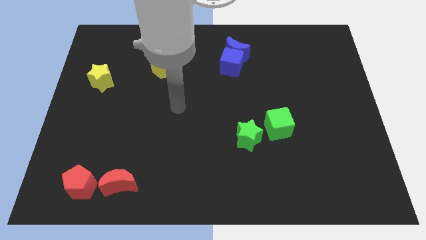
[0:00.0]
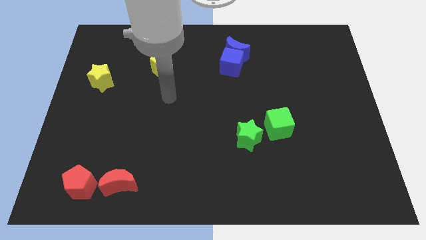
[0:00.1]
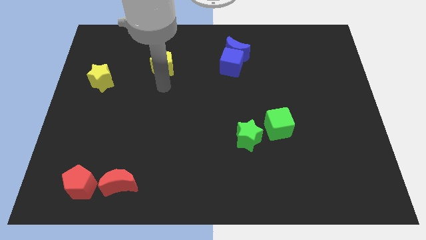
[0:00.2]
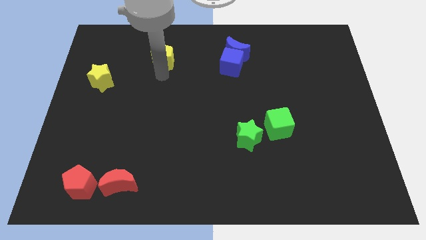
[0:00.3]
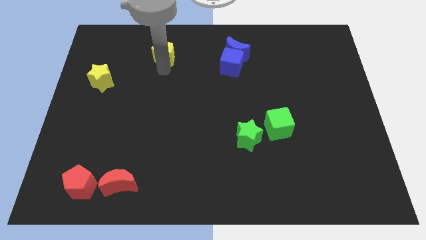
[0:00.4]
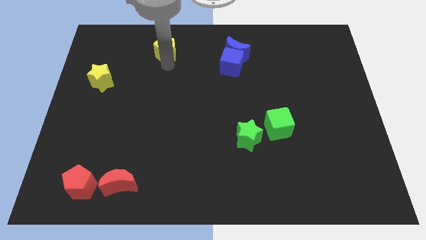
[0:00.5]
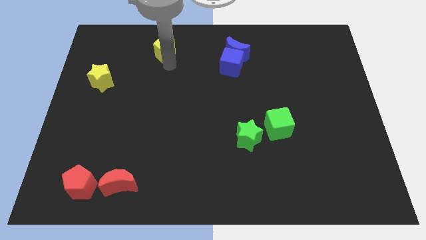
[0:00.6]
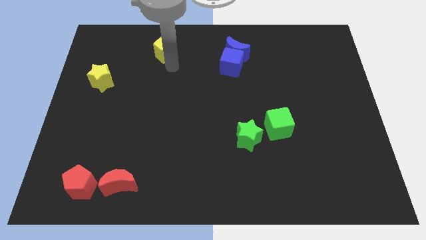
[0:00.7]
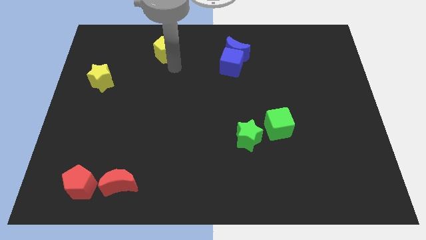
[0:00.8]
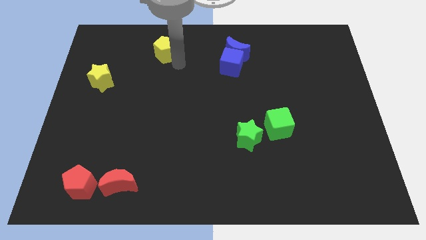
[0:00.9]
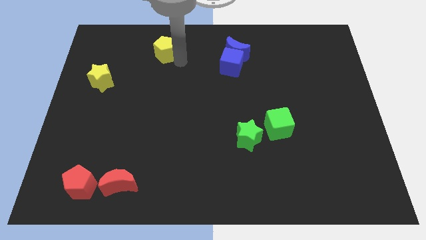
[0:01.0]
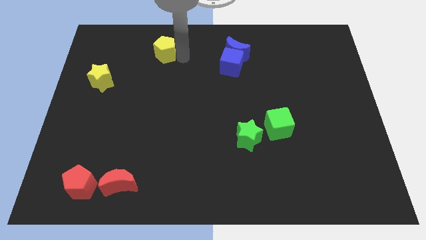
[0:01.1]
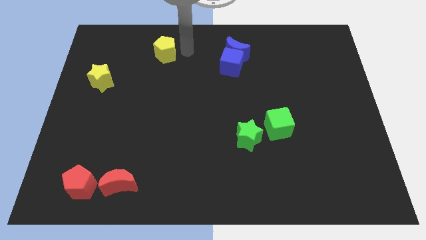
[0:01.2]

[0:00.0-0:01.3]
move the yellow pentagon to the top of the board

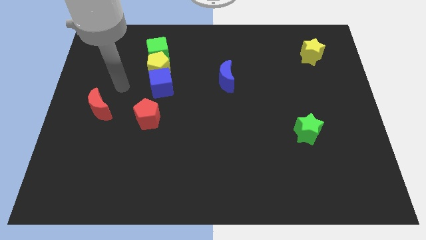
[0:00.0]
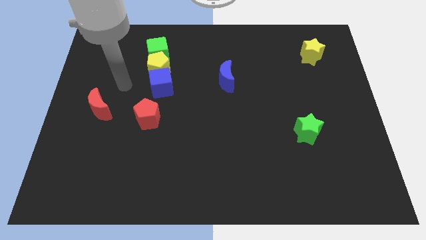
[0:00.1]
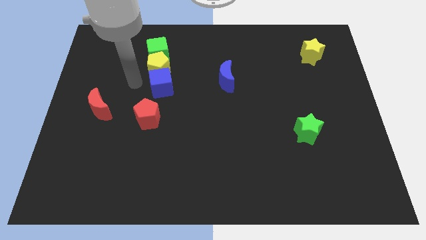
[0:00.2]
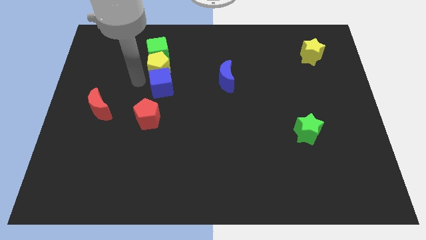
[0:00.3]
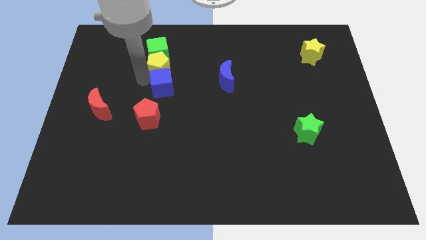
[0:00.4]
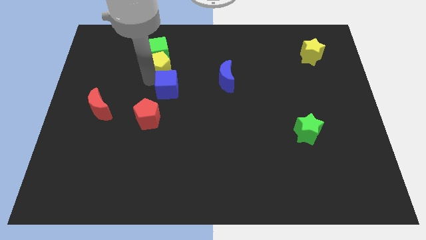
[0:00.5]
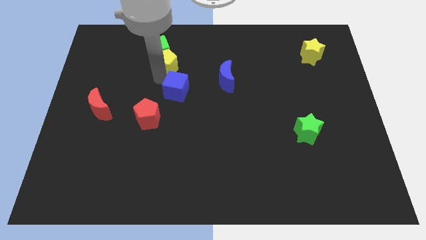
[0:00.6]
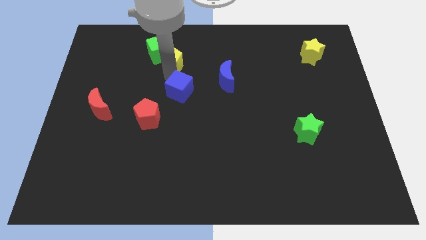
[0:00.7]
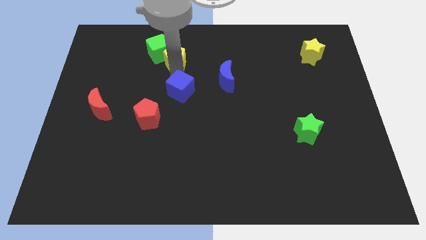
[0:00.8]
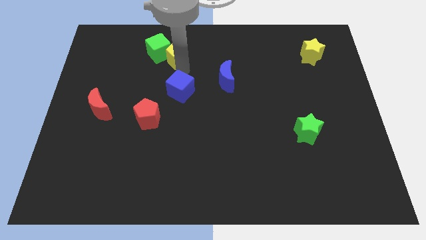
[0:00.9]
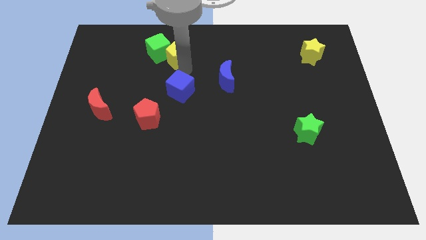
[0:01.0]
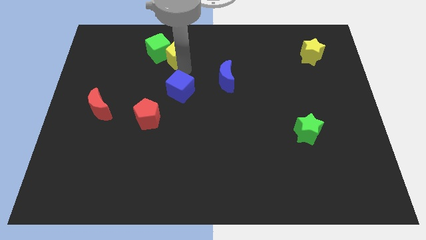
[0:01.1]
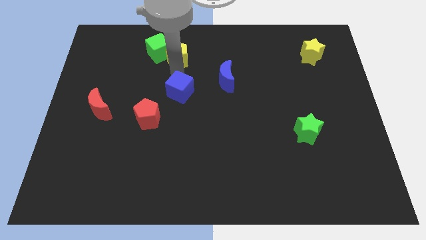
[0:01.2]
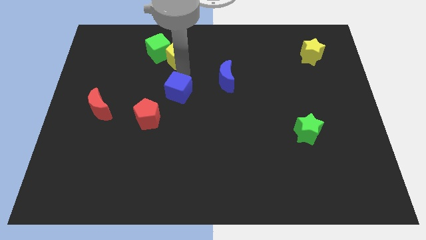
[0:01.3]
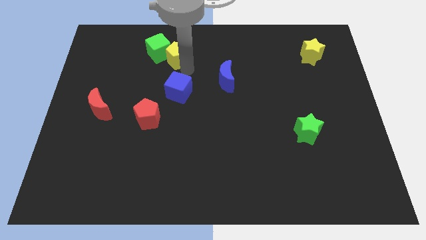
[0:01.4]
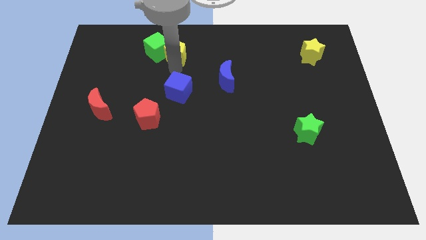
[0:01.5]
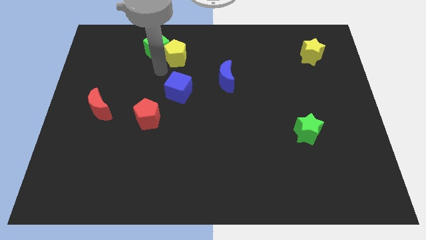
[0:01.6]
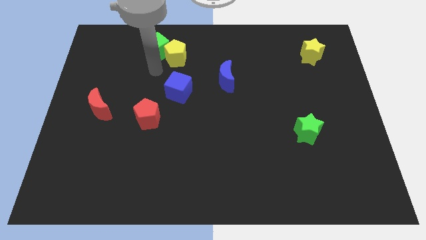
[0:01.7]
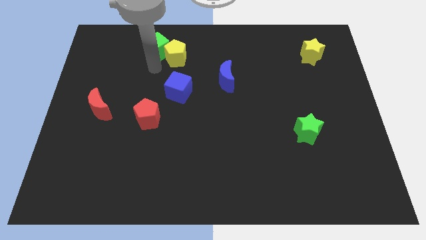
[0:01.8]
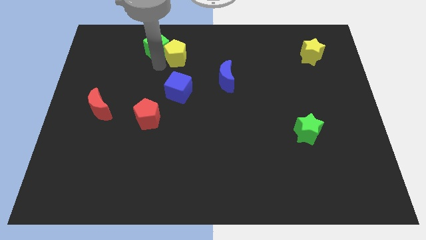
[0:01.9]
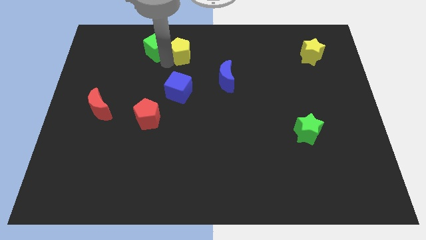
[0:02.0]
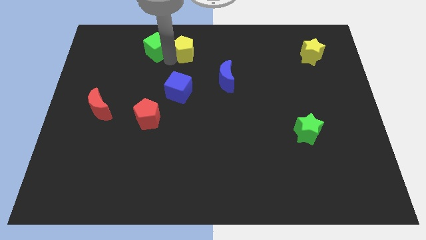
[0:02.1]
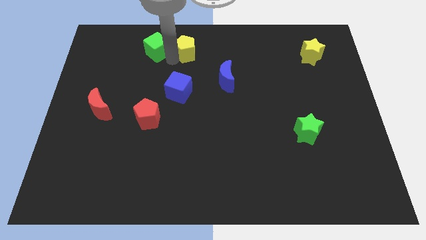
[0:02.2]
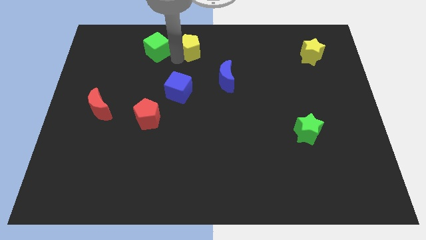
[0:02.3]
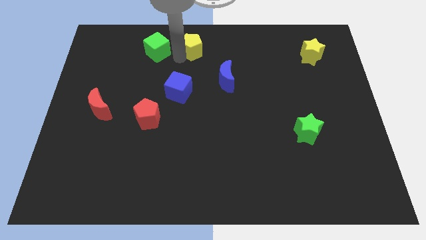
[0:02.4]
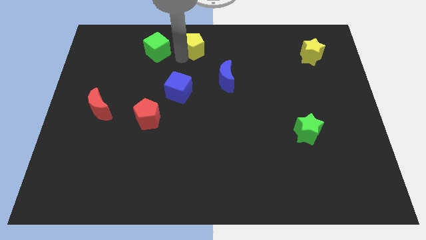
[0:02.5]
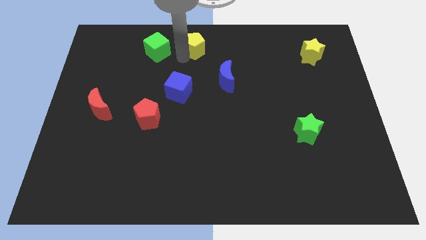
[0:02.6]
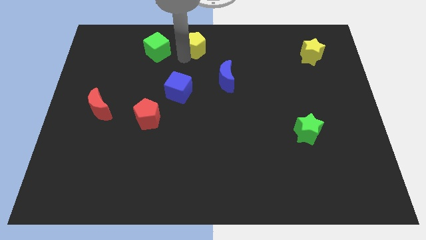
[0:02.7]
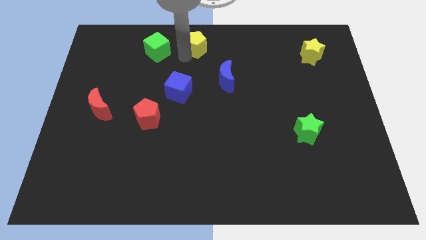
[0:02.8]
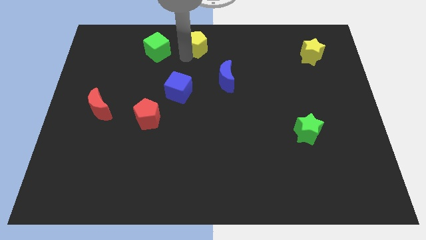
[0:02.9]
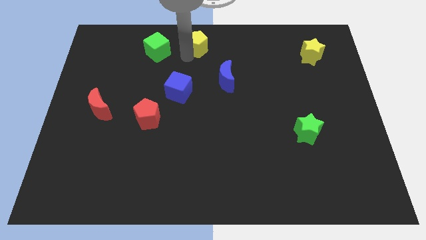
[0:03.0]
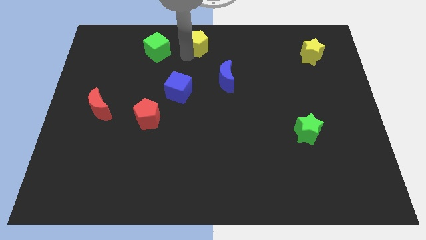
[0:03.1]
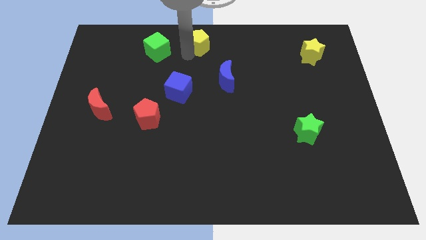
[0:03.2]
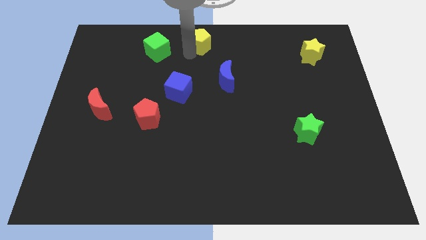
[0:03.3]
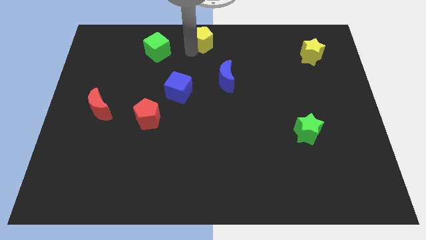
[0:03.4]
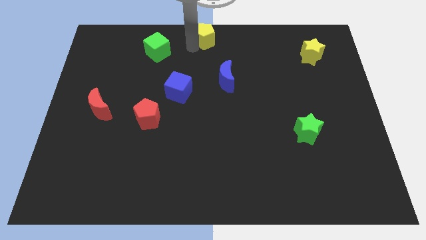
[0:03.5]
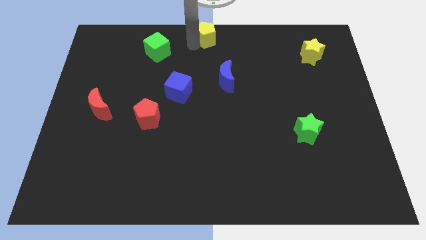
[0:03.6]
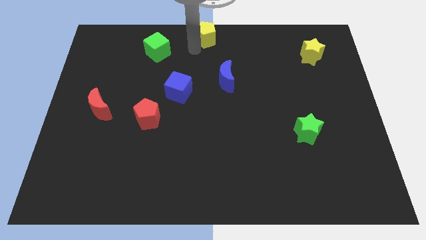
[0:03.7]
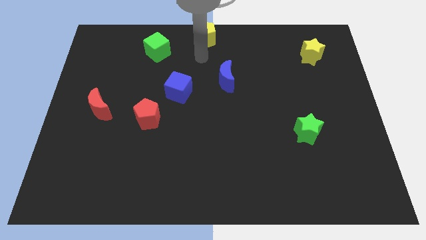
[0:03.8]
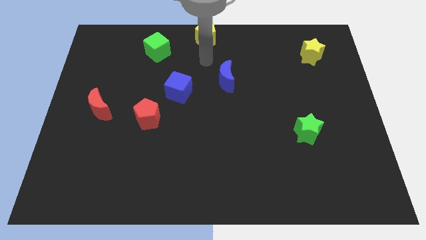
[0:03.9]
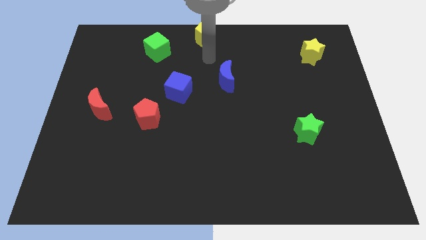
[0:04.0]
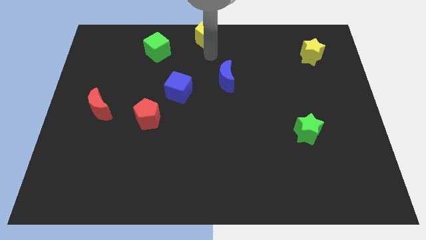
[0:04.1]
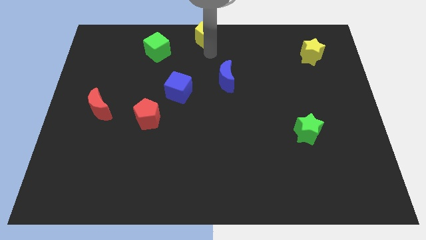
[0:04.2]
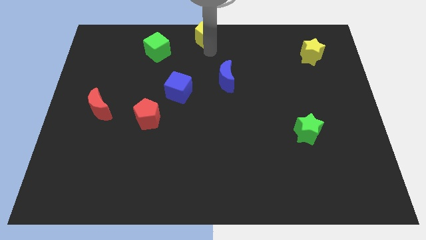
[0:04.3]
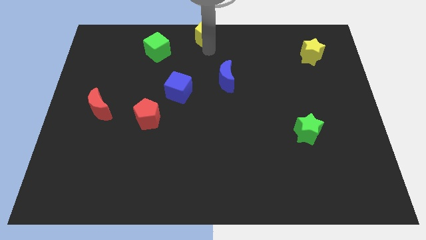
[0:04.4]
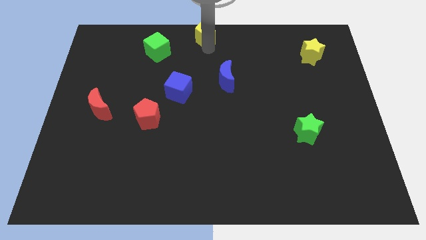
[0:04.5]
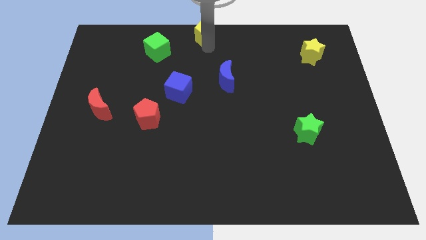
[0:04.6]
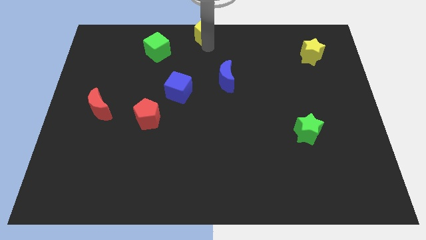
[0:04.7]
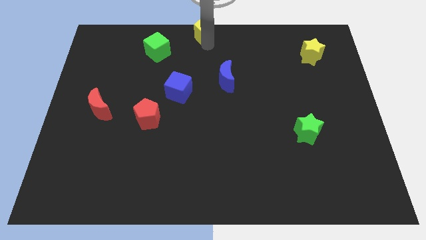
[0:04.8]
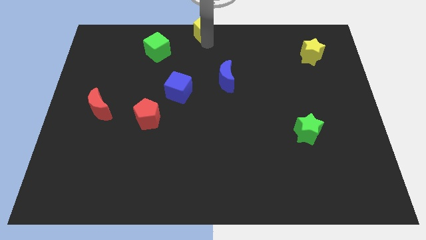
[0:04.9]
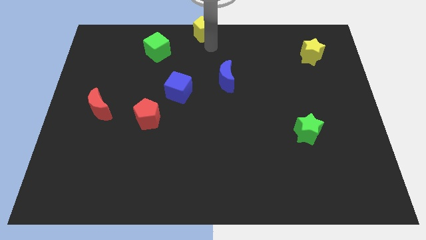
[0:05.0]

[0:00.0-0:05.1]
move yellow pentagon to the top center

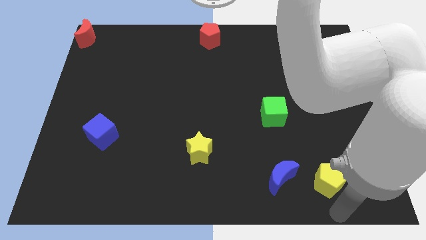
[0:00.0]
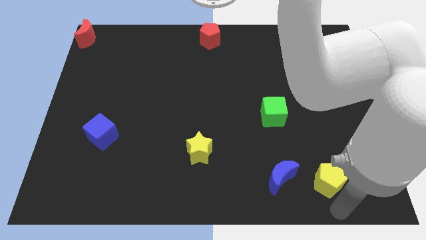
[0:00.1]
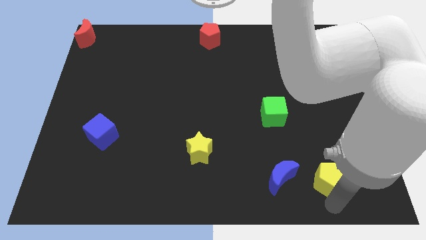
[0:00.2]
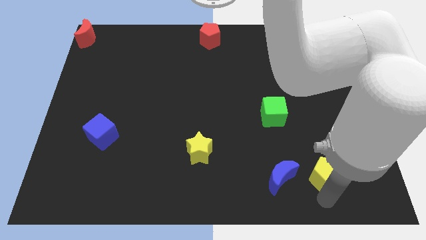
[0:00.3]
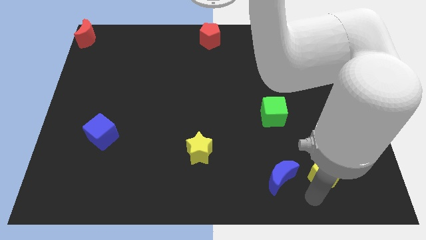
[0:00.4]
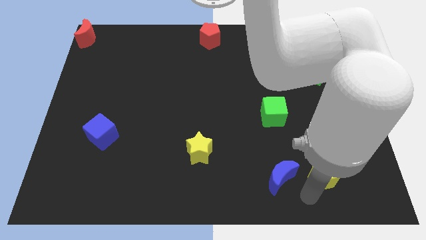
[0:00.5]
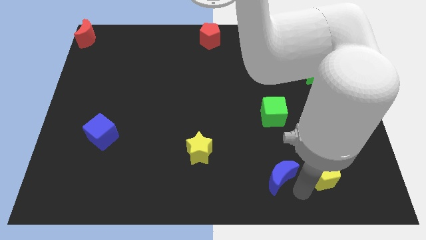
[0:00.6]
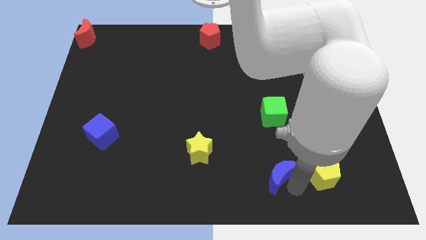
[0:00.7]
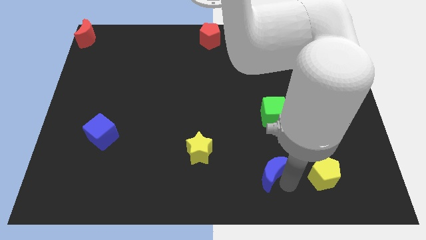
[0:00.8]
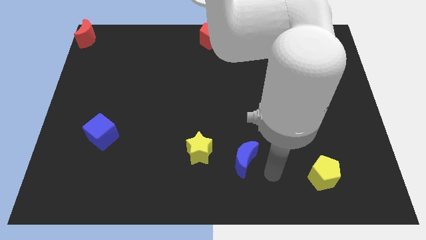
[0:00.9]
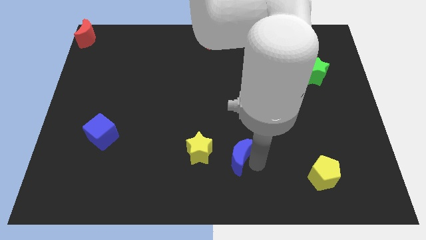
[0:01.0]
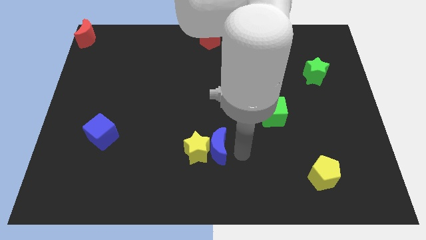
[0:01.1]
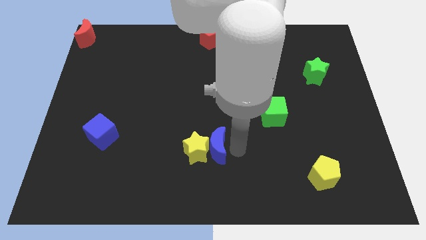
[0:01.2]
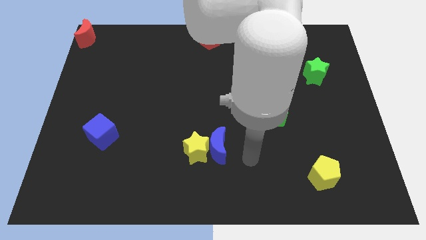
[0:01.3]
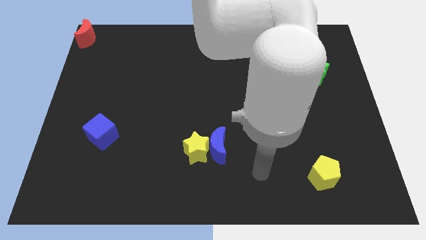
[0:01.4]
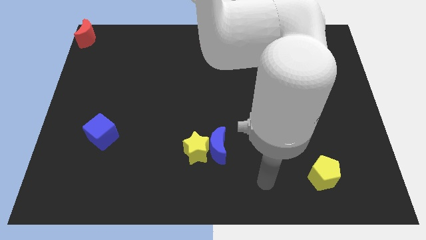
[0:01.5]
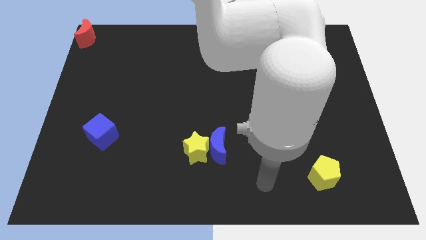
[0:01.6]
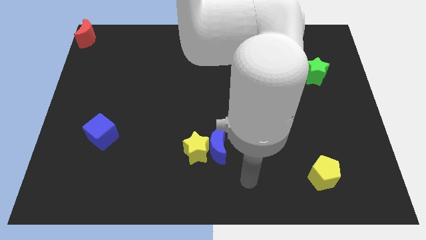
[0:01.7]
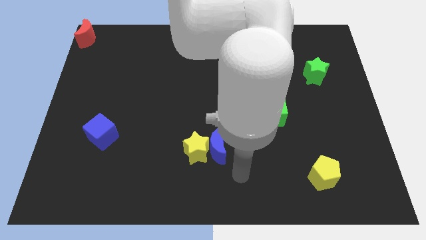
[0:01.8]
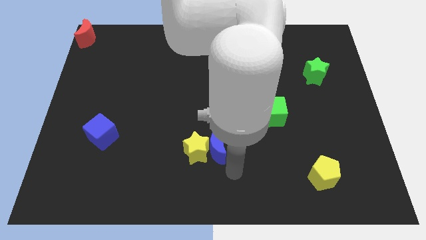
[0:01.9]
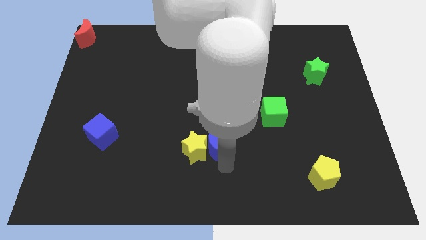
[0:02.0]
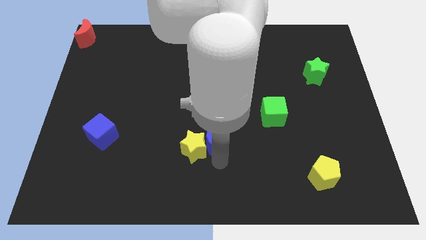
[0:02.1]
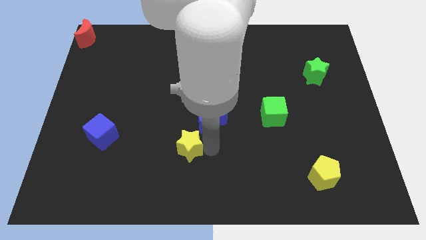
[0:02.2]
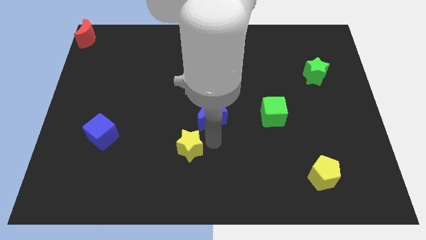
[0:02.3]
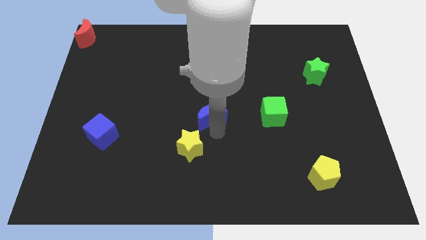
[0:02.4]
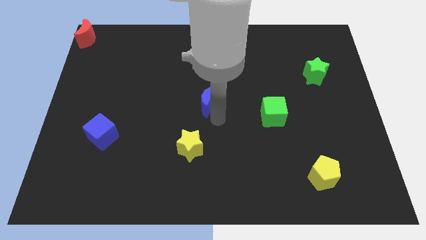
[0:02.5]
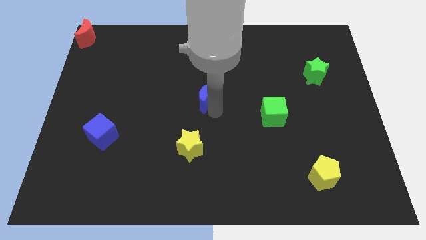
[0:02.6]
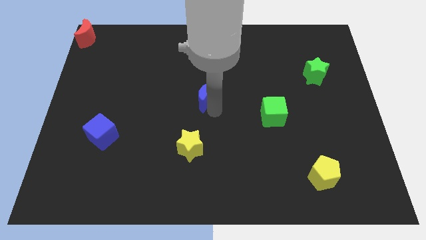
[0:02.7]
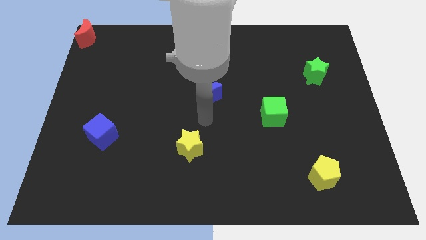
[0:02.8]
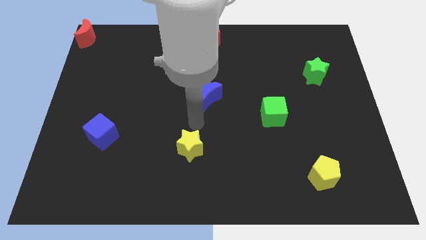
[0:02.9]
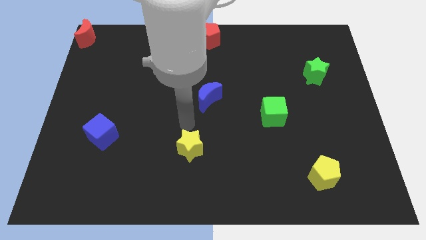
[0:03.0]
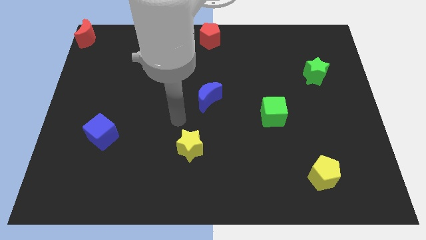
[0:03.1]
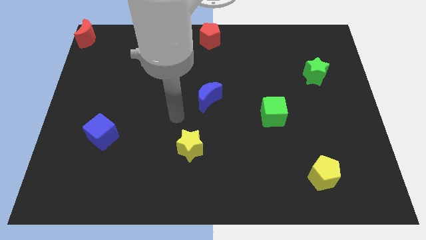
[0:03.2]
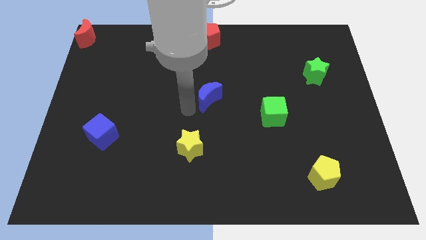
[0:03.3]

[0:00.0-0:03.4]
place the blue moon above the yellow star
